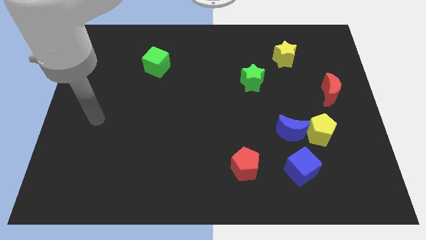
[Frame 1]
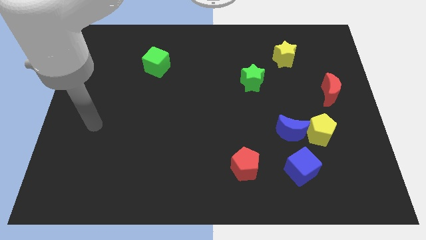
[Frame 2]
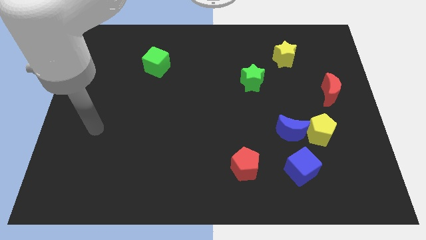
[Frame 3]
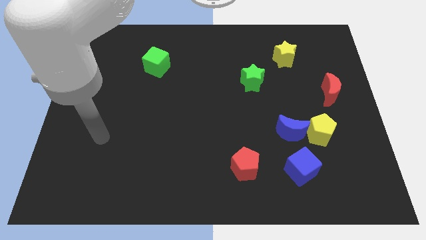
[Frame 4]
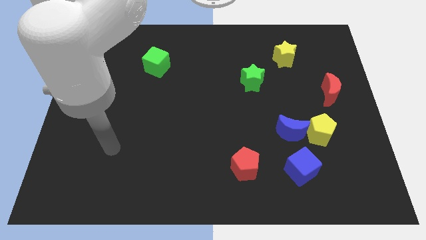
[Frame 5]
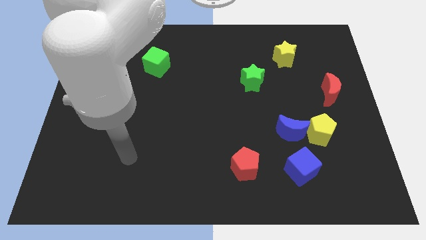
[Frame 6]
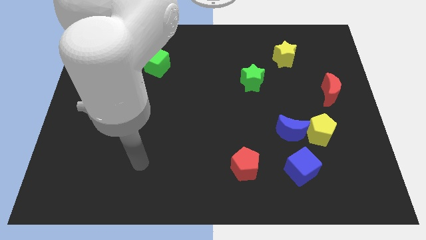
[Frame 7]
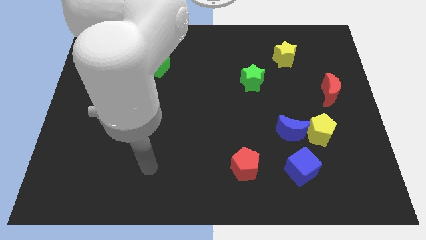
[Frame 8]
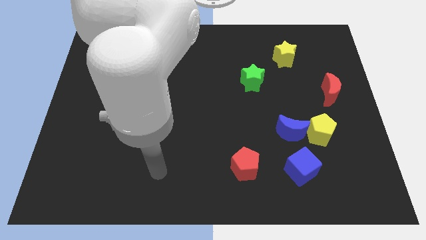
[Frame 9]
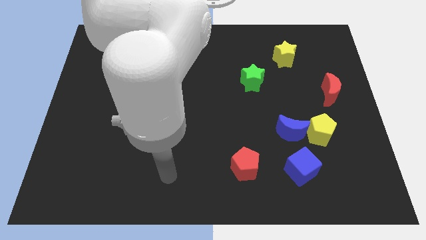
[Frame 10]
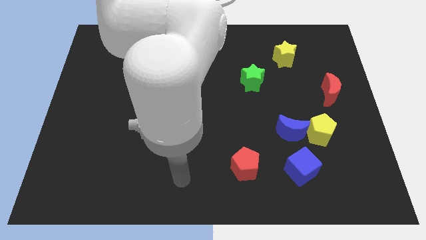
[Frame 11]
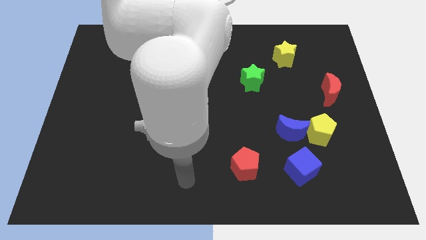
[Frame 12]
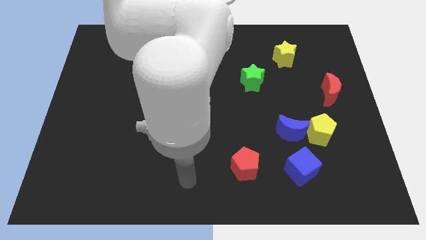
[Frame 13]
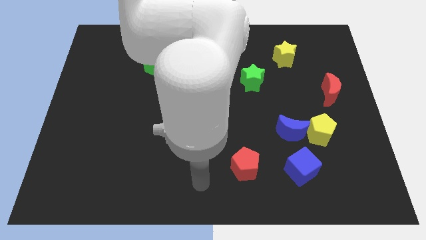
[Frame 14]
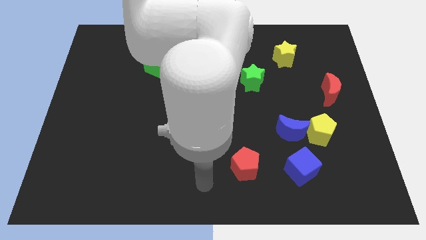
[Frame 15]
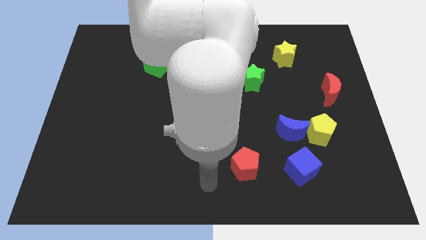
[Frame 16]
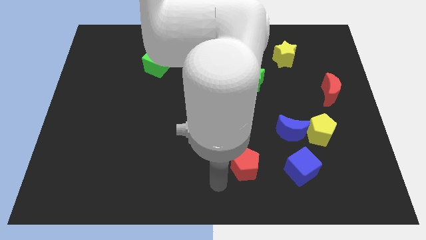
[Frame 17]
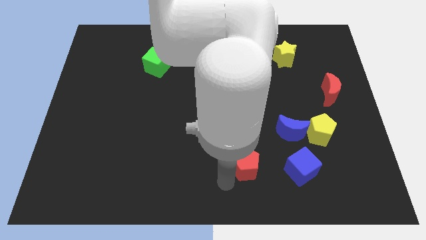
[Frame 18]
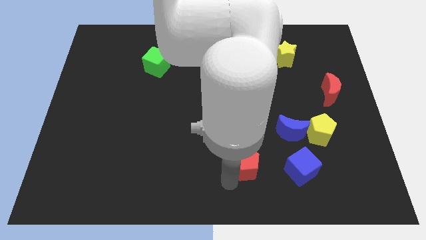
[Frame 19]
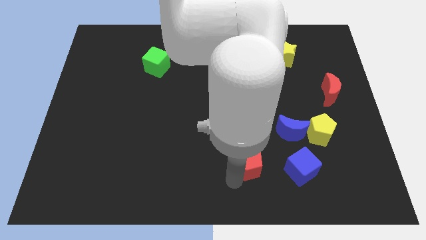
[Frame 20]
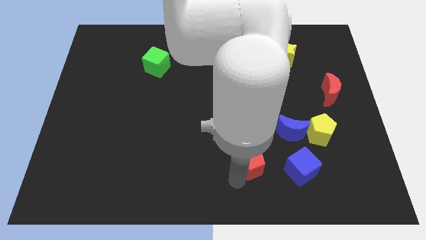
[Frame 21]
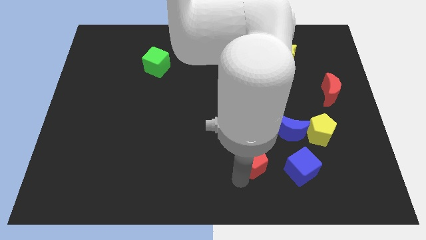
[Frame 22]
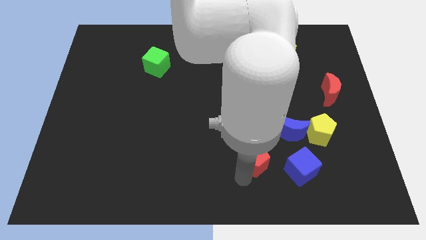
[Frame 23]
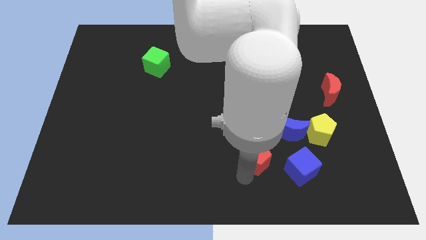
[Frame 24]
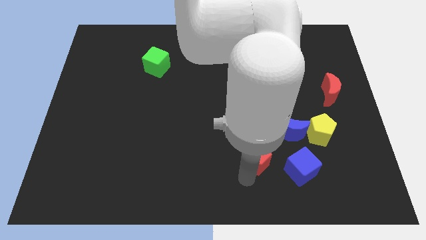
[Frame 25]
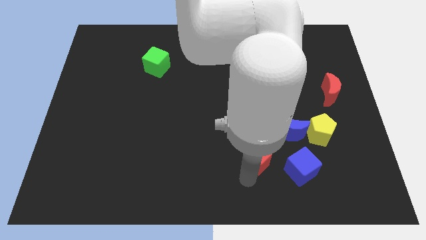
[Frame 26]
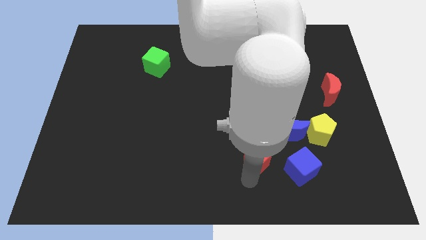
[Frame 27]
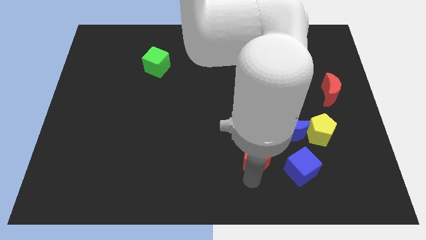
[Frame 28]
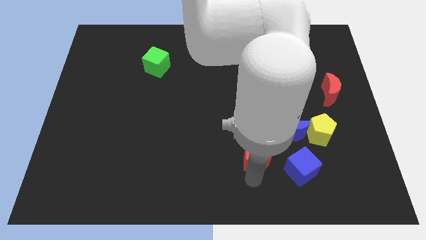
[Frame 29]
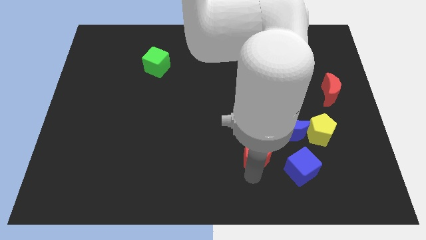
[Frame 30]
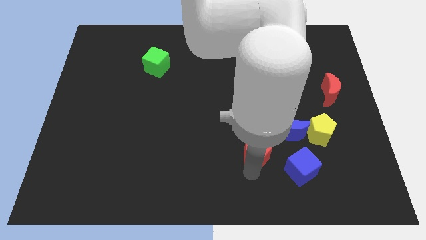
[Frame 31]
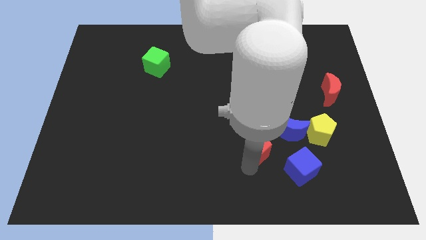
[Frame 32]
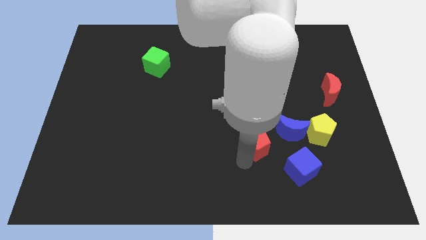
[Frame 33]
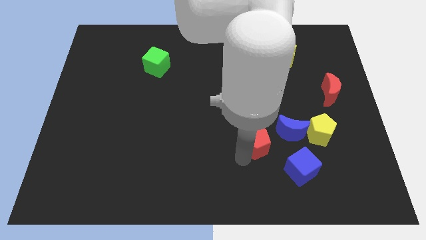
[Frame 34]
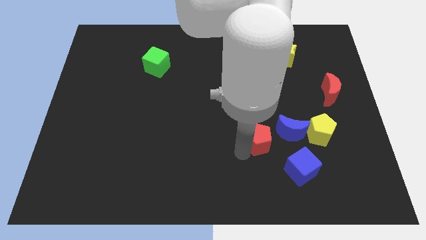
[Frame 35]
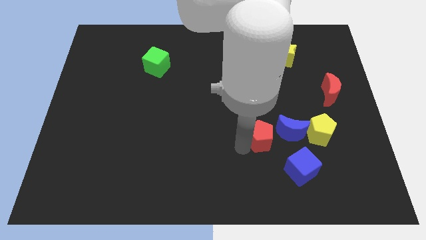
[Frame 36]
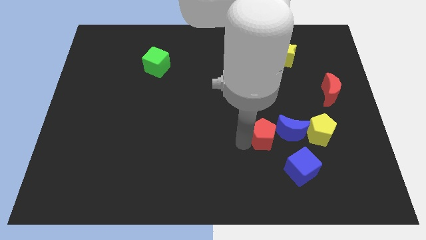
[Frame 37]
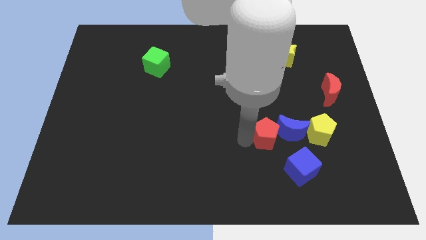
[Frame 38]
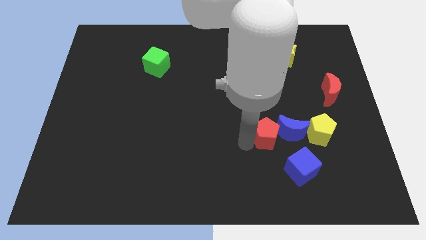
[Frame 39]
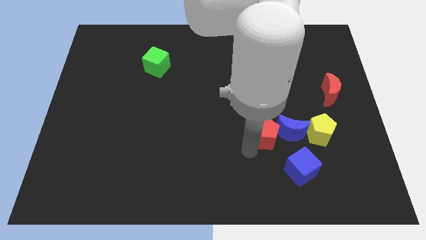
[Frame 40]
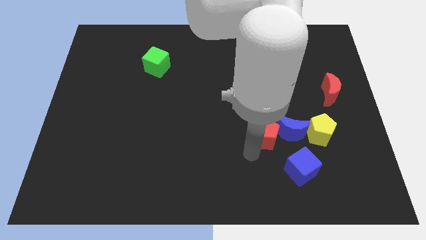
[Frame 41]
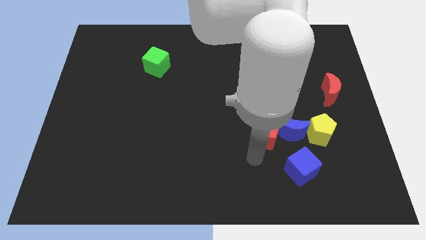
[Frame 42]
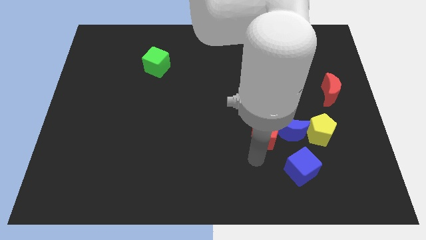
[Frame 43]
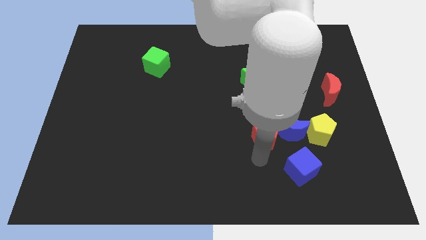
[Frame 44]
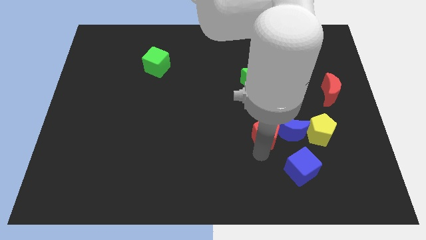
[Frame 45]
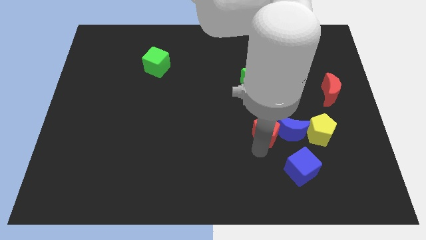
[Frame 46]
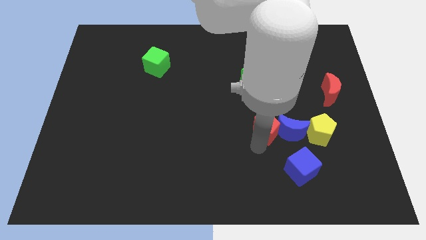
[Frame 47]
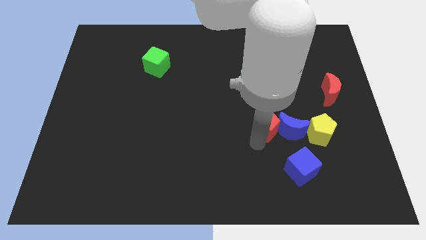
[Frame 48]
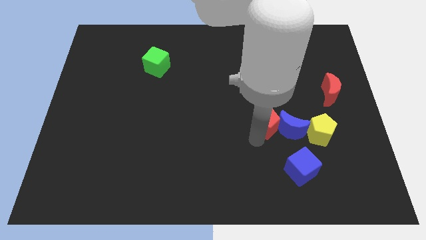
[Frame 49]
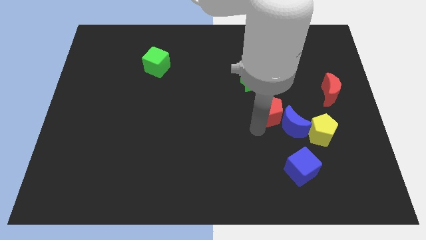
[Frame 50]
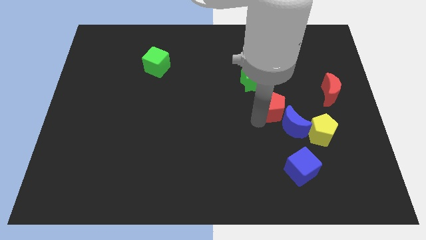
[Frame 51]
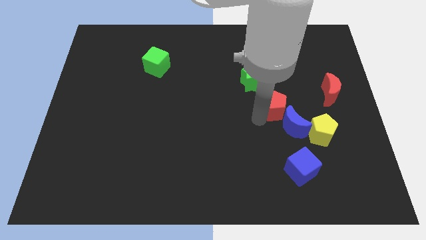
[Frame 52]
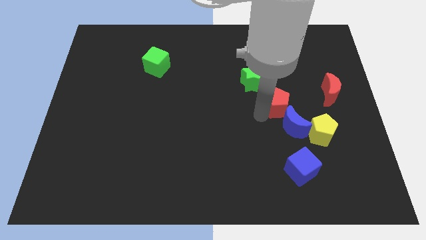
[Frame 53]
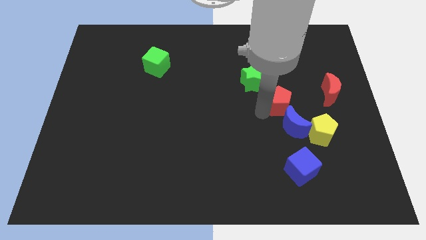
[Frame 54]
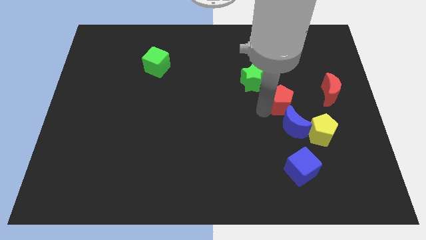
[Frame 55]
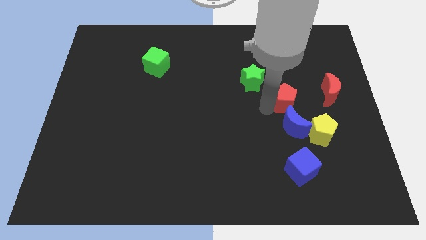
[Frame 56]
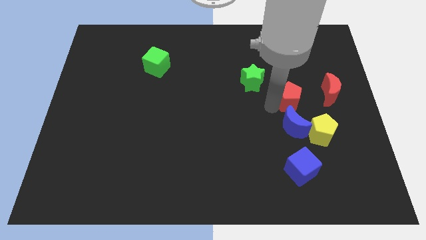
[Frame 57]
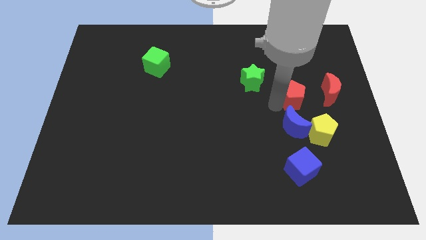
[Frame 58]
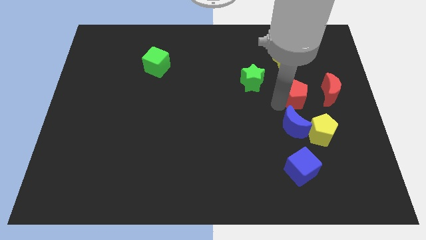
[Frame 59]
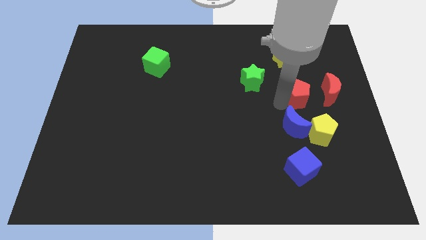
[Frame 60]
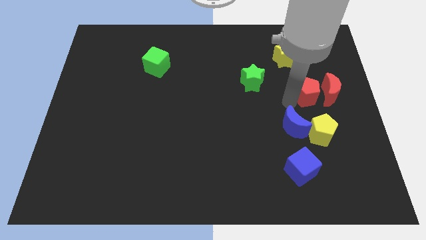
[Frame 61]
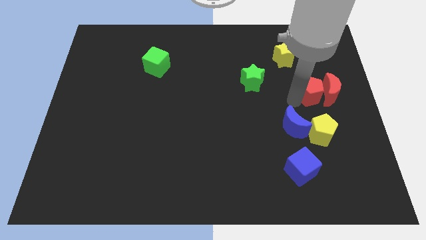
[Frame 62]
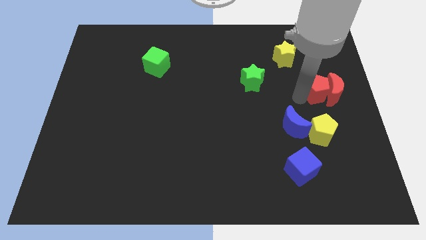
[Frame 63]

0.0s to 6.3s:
put the red pentagon close to the red moon

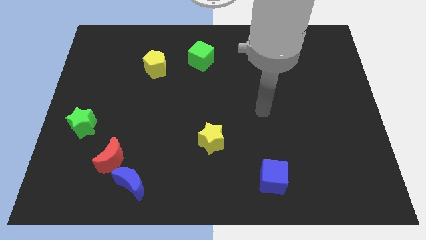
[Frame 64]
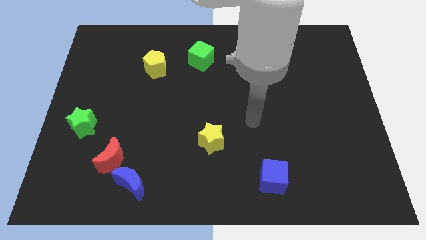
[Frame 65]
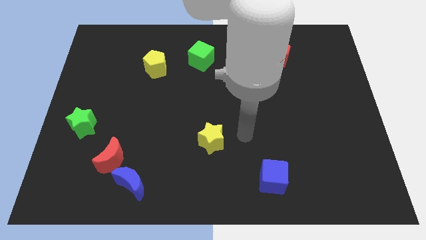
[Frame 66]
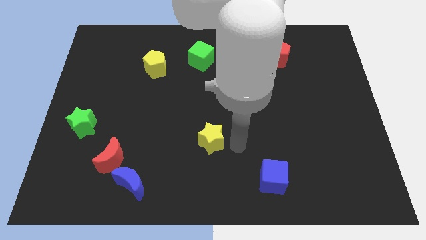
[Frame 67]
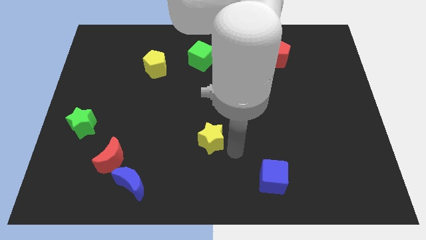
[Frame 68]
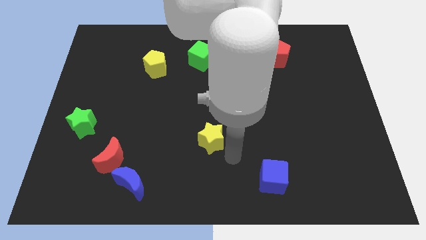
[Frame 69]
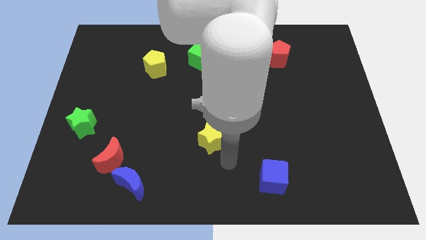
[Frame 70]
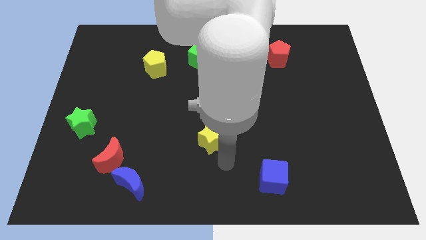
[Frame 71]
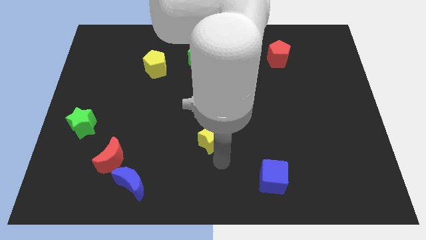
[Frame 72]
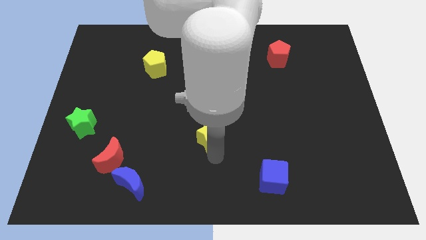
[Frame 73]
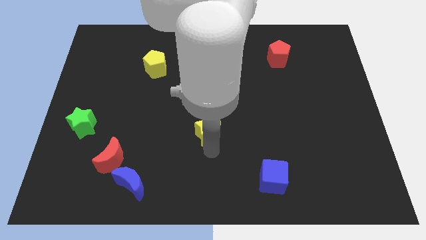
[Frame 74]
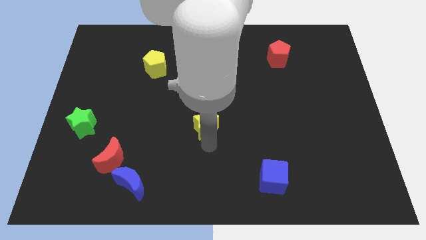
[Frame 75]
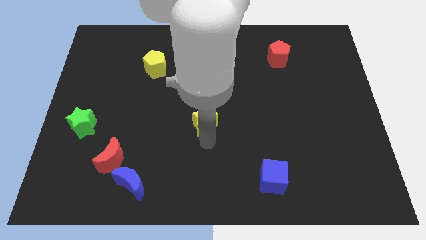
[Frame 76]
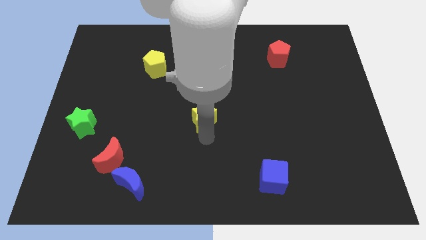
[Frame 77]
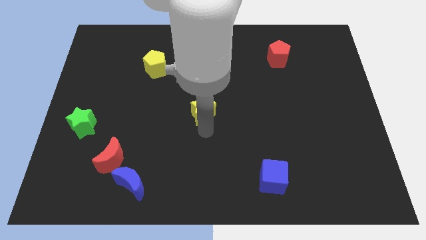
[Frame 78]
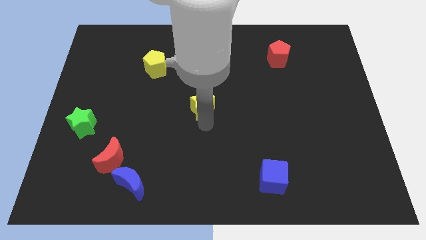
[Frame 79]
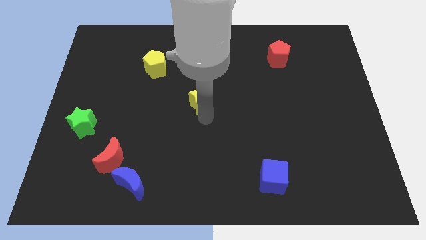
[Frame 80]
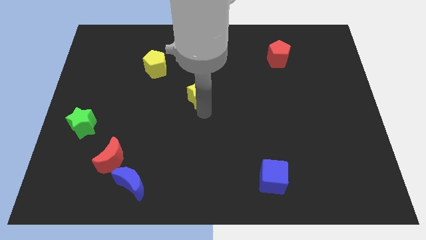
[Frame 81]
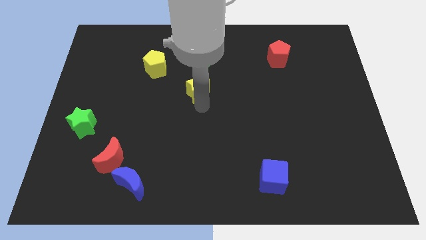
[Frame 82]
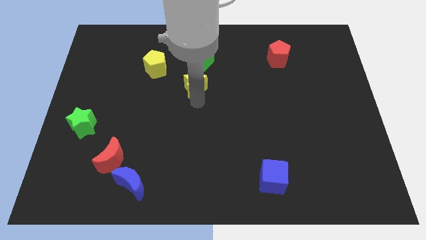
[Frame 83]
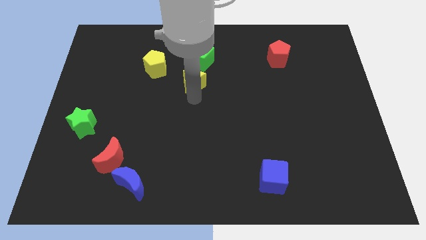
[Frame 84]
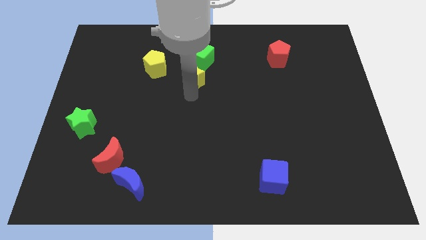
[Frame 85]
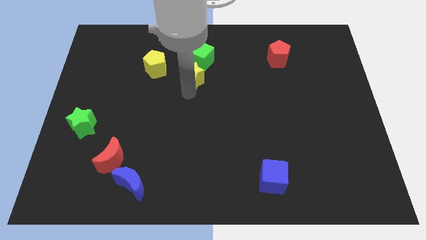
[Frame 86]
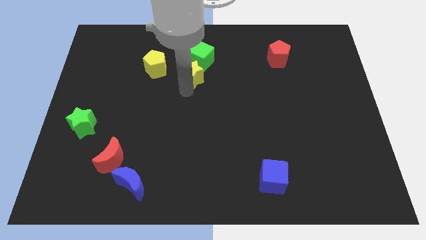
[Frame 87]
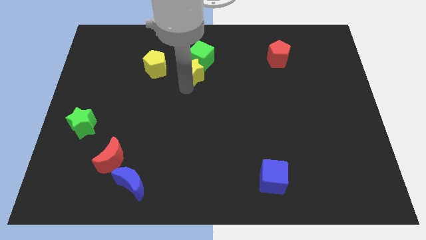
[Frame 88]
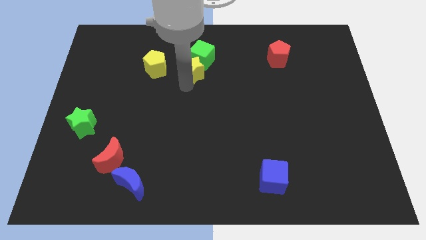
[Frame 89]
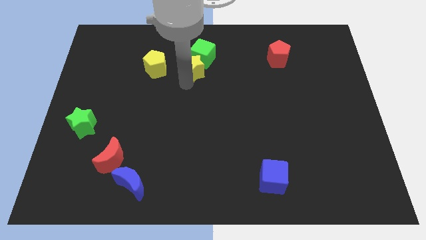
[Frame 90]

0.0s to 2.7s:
put the yellow star to the green cube
